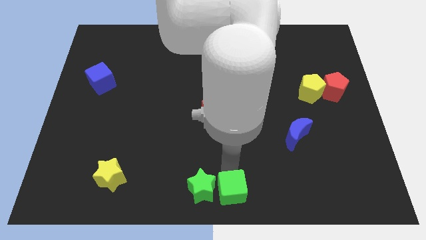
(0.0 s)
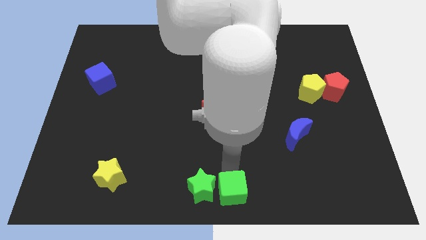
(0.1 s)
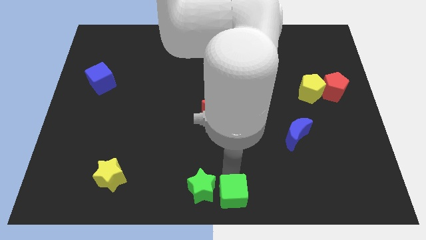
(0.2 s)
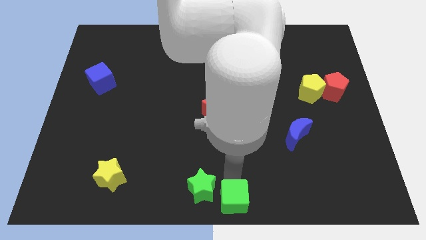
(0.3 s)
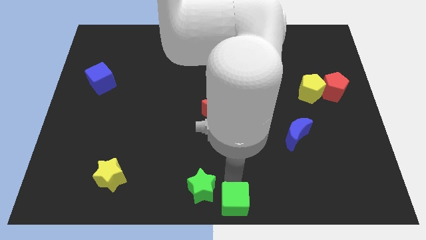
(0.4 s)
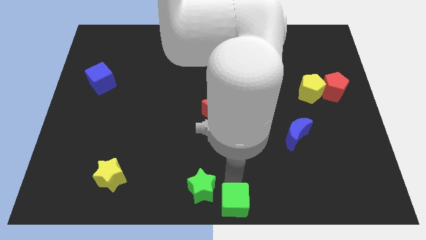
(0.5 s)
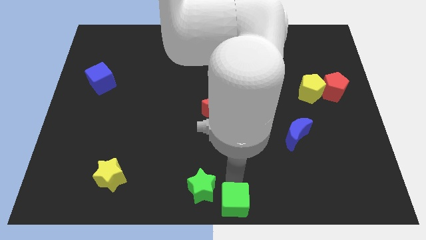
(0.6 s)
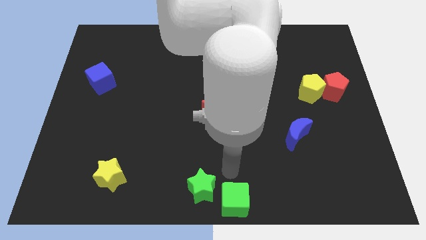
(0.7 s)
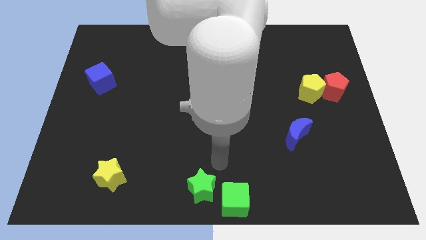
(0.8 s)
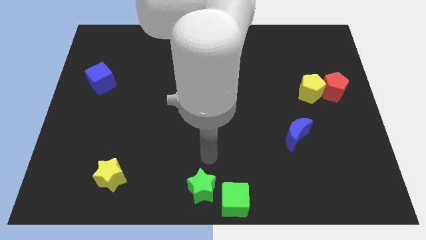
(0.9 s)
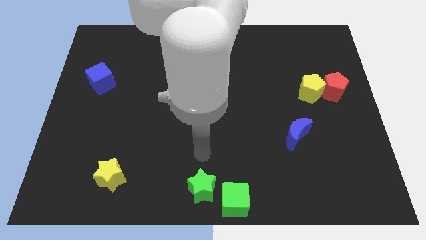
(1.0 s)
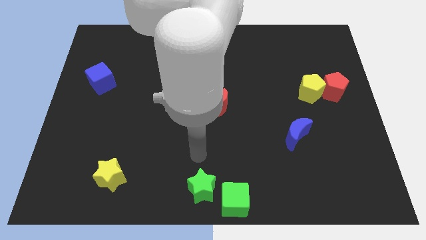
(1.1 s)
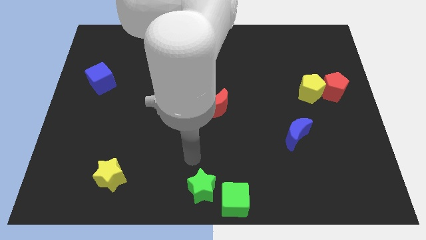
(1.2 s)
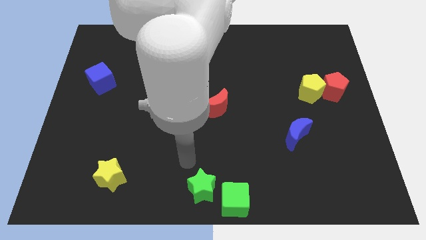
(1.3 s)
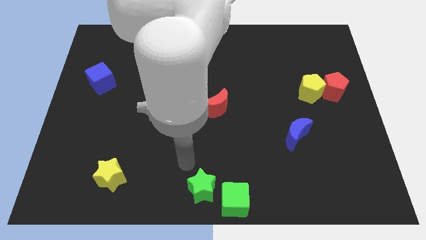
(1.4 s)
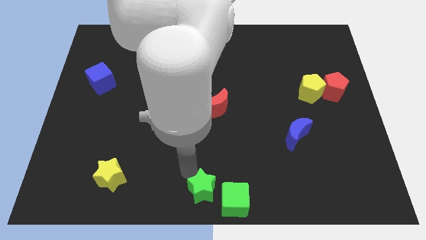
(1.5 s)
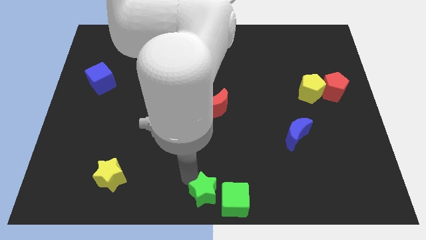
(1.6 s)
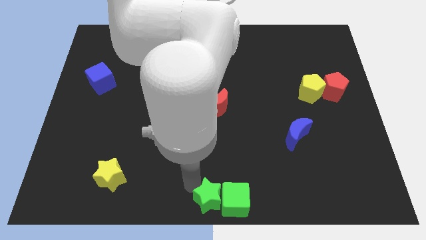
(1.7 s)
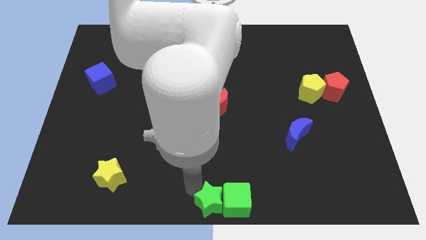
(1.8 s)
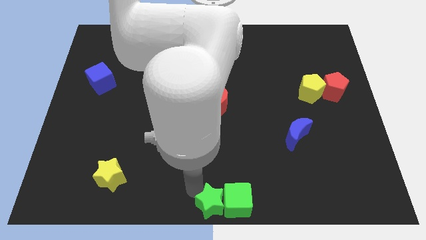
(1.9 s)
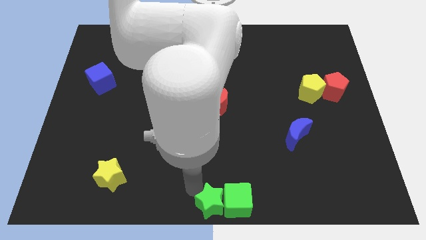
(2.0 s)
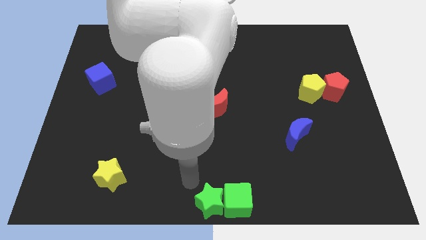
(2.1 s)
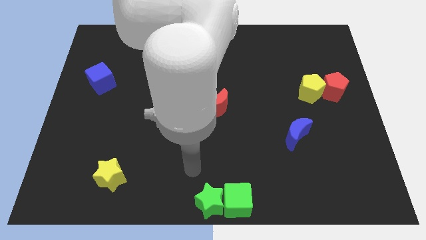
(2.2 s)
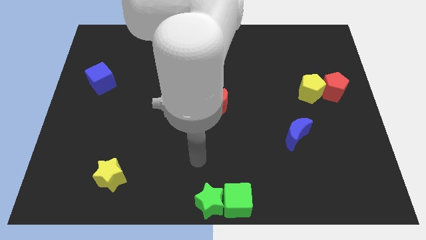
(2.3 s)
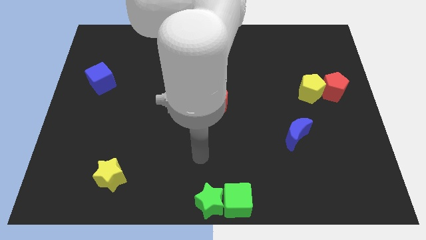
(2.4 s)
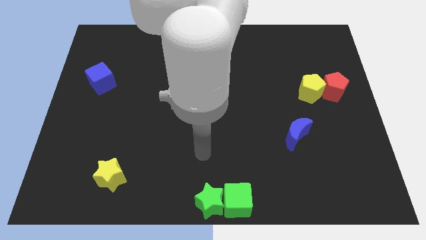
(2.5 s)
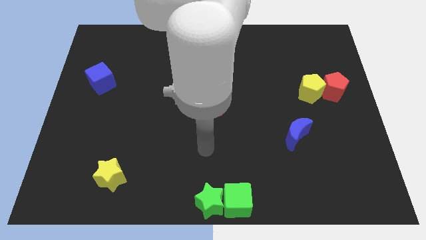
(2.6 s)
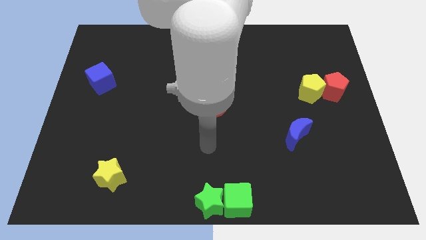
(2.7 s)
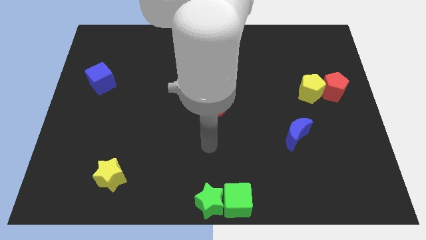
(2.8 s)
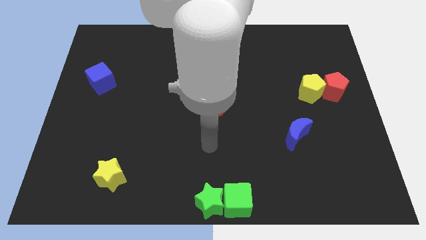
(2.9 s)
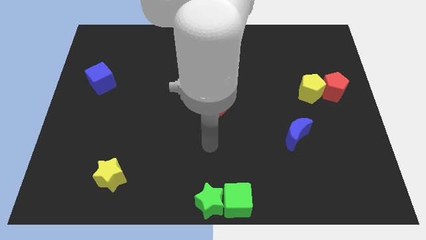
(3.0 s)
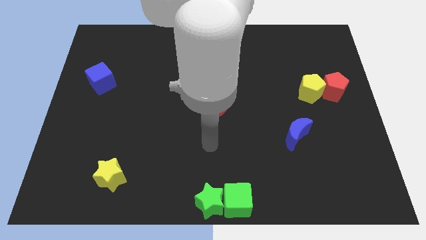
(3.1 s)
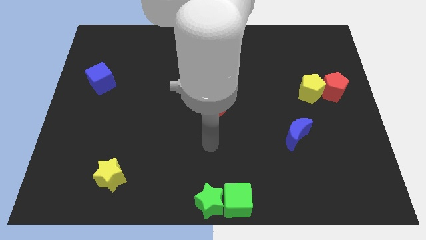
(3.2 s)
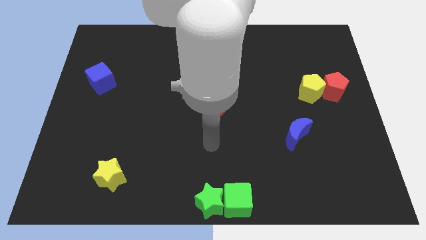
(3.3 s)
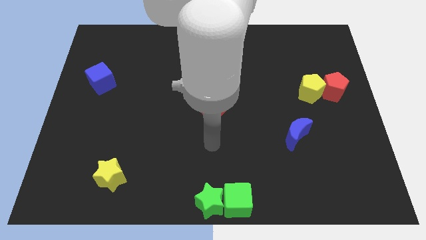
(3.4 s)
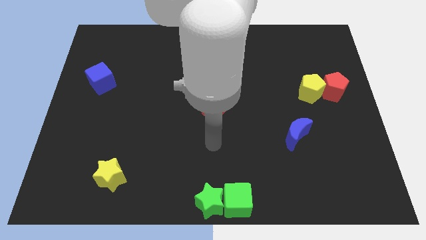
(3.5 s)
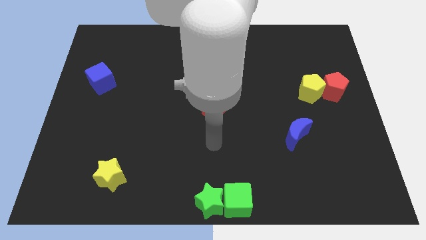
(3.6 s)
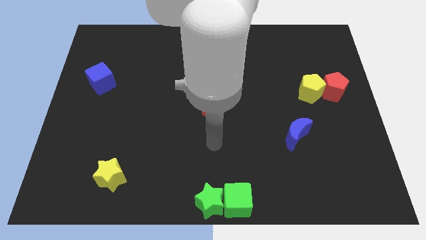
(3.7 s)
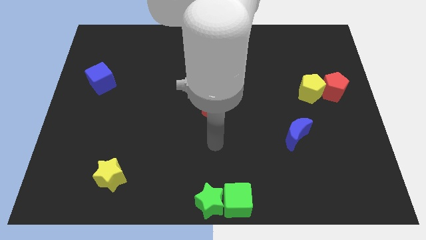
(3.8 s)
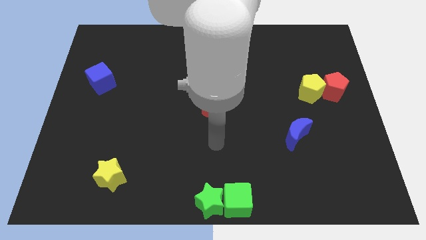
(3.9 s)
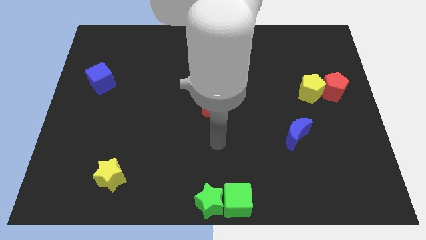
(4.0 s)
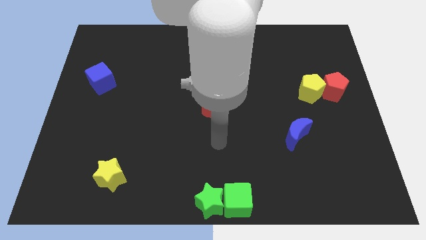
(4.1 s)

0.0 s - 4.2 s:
slightly push the green blocks to bottom center

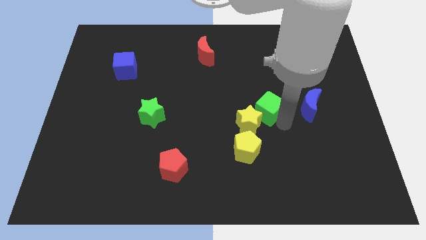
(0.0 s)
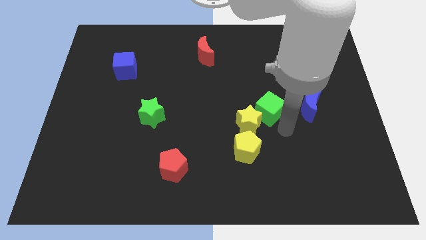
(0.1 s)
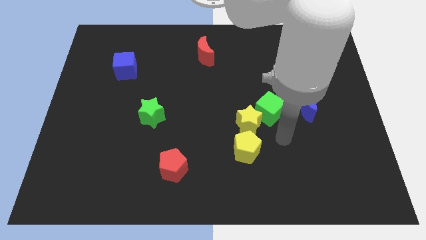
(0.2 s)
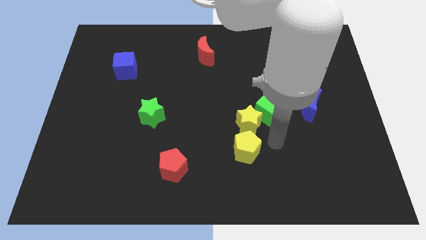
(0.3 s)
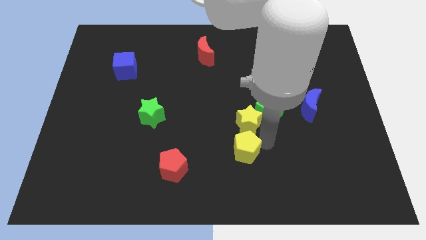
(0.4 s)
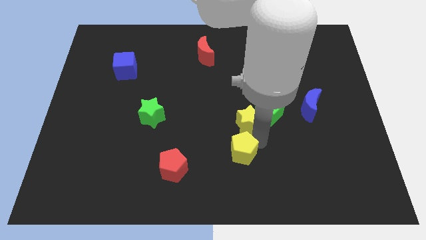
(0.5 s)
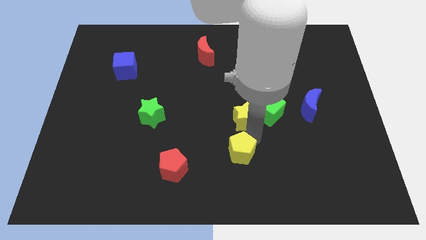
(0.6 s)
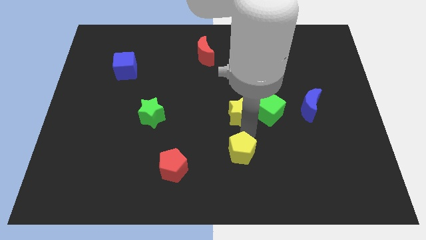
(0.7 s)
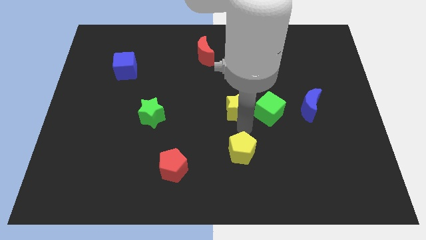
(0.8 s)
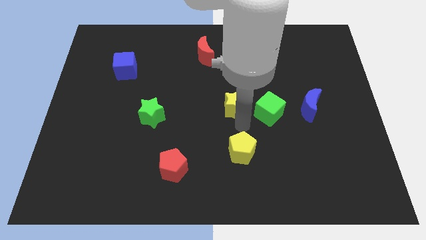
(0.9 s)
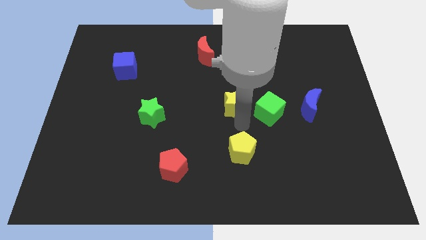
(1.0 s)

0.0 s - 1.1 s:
put the yellow star parallel to the green star

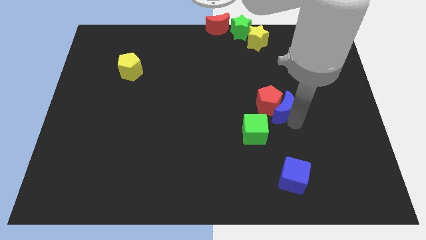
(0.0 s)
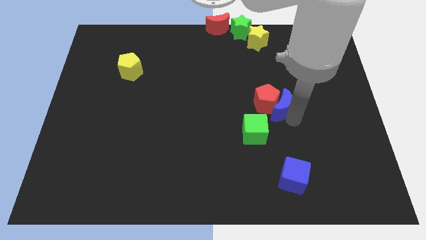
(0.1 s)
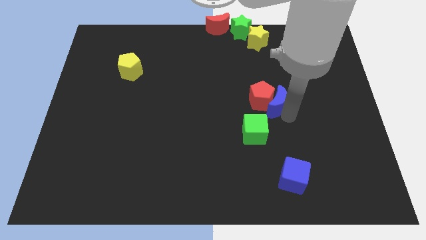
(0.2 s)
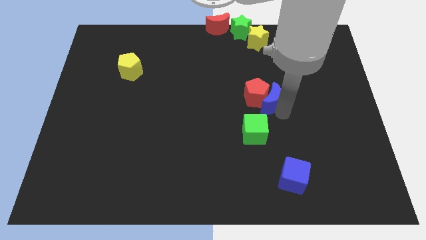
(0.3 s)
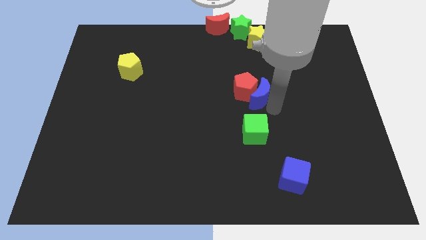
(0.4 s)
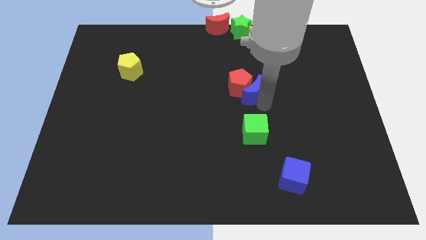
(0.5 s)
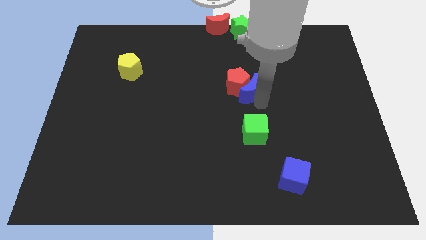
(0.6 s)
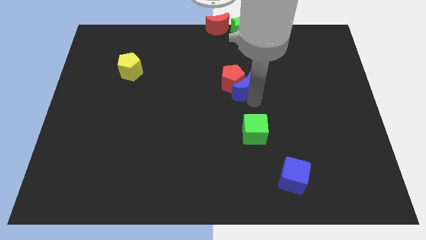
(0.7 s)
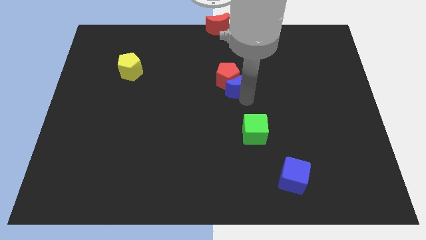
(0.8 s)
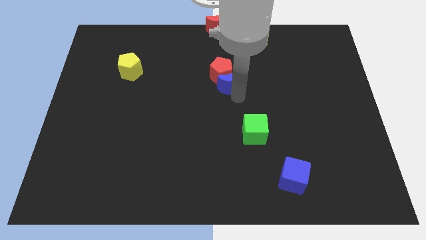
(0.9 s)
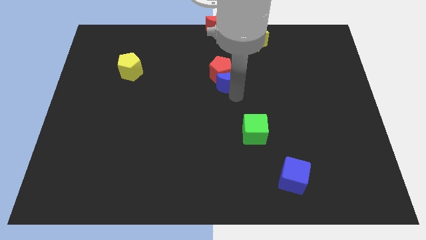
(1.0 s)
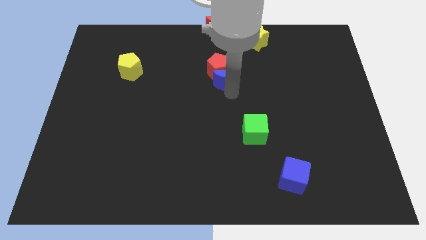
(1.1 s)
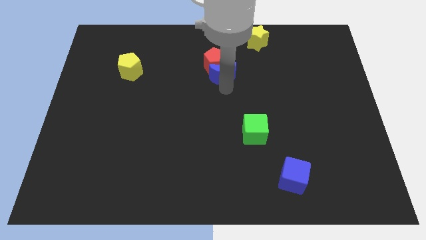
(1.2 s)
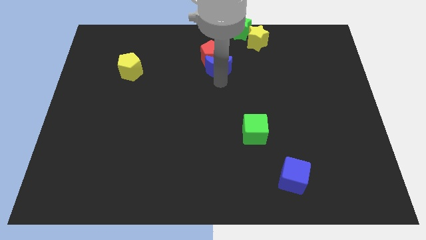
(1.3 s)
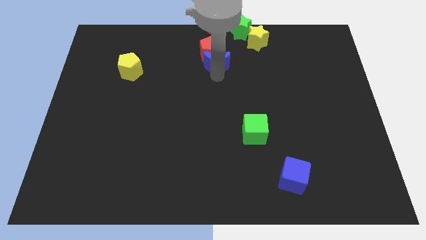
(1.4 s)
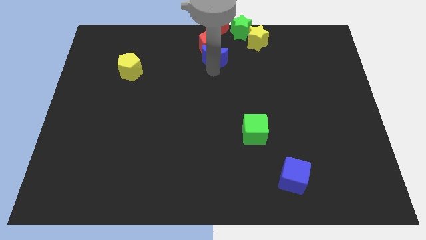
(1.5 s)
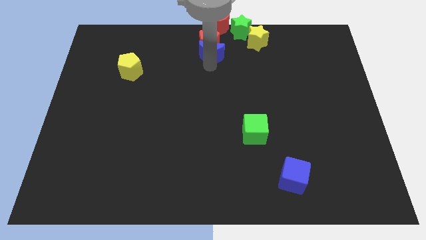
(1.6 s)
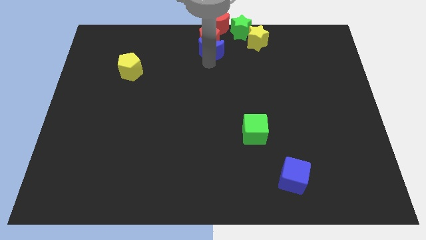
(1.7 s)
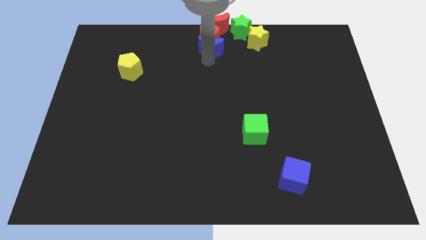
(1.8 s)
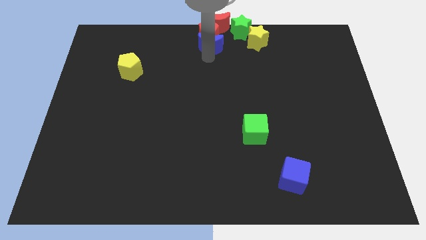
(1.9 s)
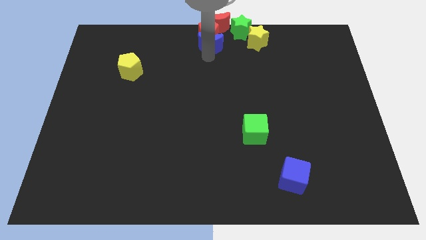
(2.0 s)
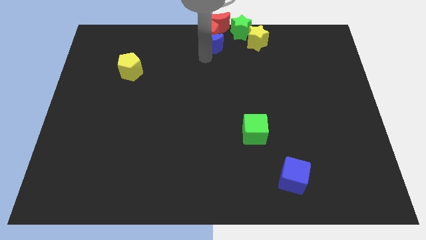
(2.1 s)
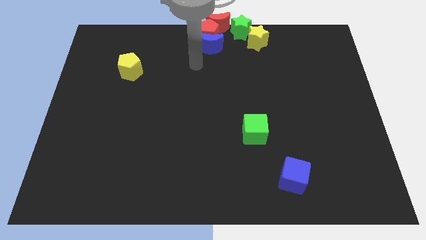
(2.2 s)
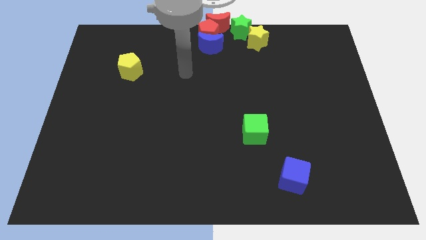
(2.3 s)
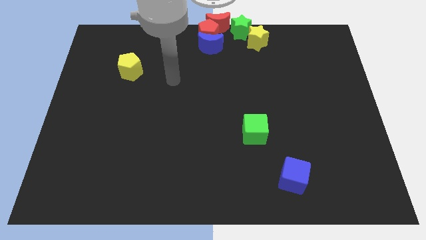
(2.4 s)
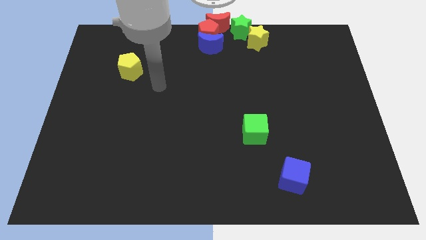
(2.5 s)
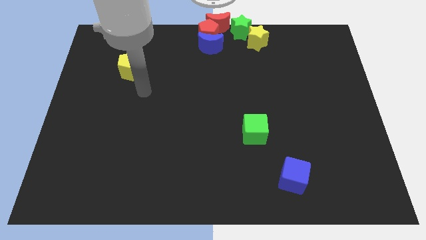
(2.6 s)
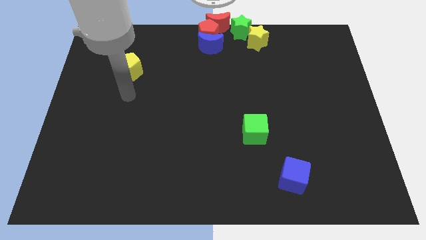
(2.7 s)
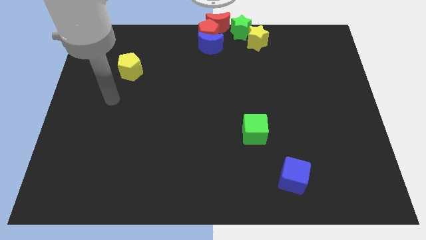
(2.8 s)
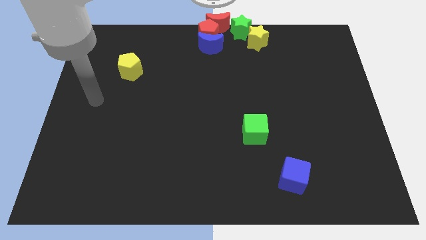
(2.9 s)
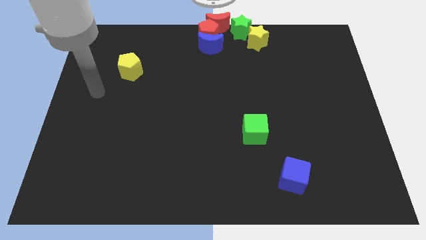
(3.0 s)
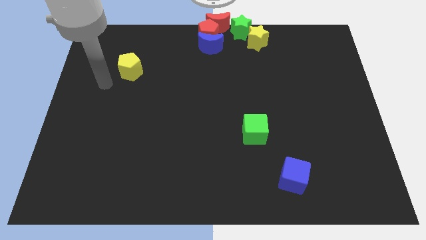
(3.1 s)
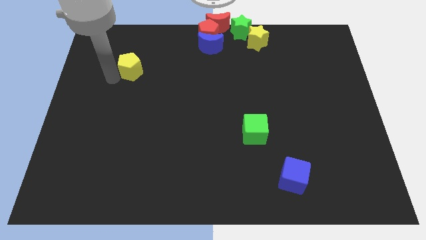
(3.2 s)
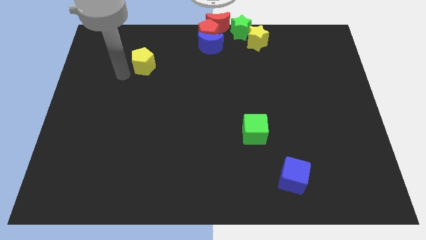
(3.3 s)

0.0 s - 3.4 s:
slide the red pentagon and blue crescent to the top center

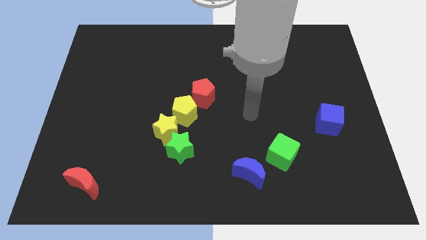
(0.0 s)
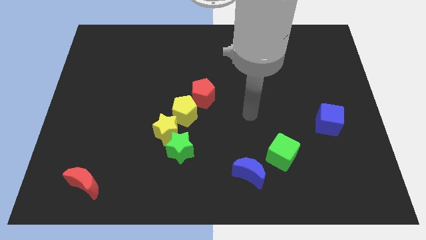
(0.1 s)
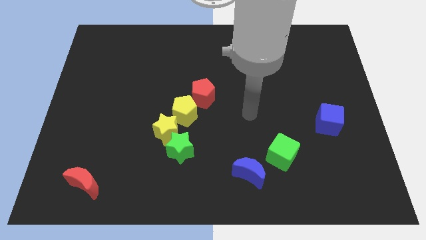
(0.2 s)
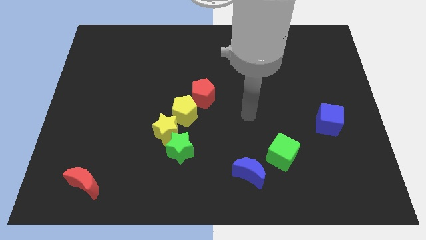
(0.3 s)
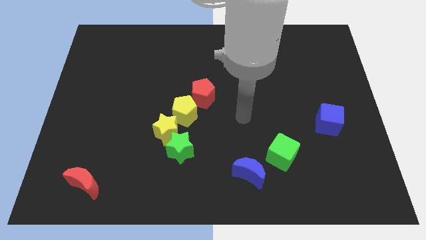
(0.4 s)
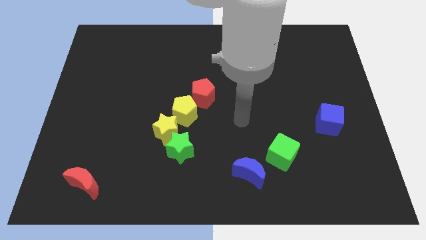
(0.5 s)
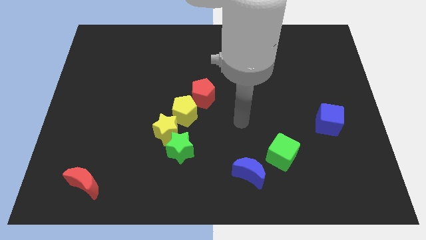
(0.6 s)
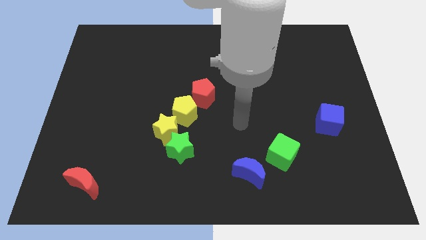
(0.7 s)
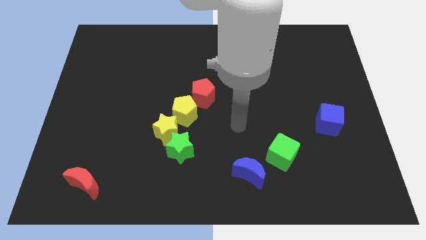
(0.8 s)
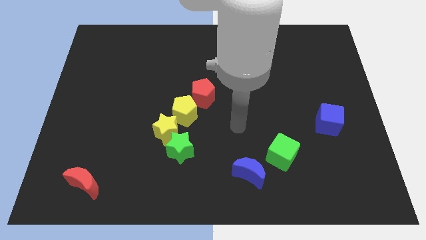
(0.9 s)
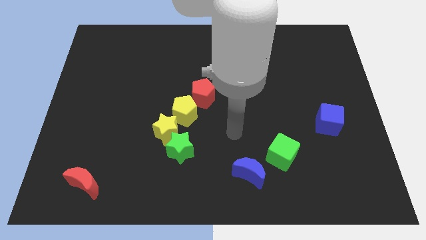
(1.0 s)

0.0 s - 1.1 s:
place your arm in between the yellow pentagon and green cube
